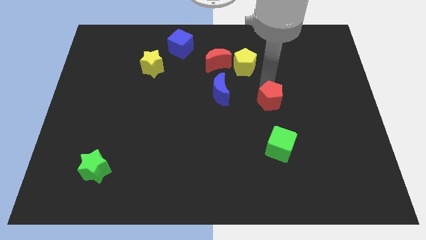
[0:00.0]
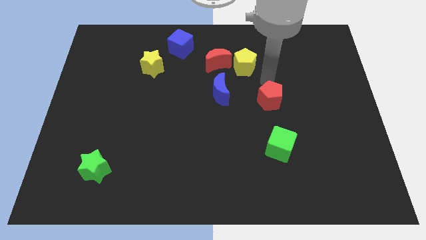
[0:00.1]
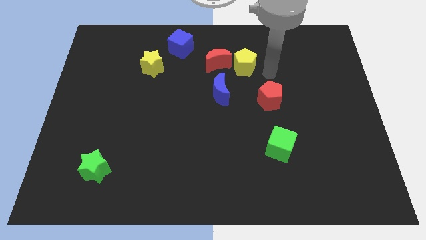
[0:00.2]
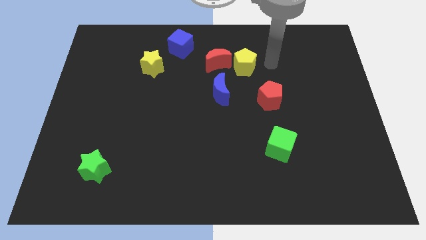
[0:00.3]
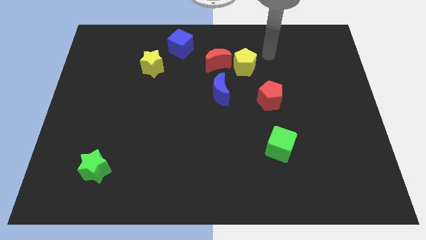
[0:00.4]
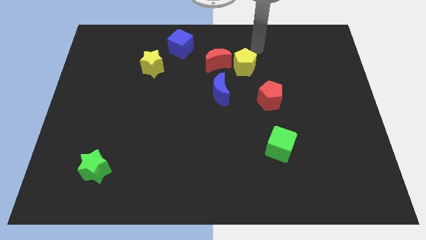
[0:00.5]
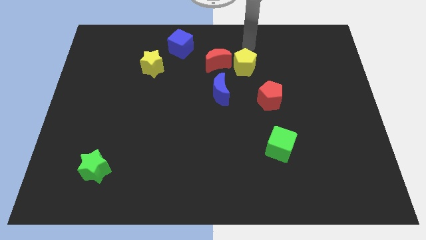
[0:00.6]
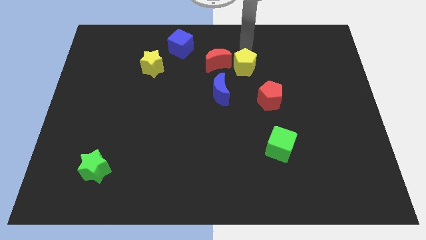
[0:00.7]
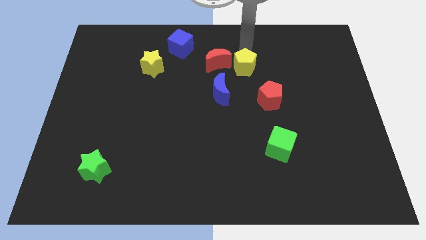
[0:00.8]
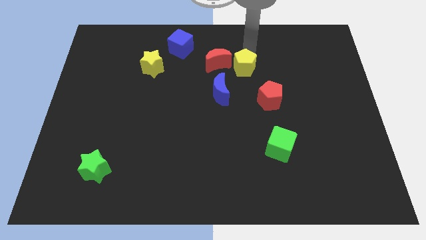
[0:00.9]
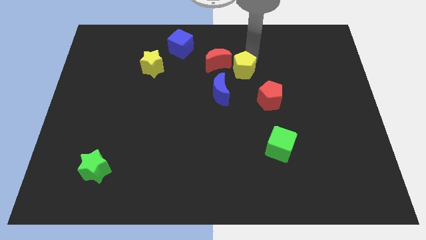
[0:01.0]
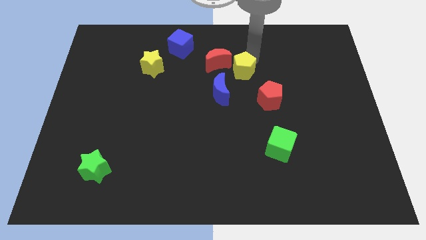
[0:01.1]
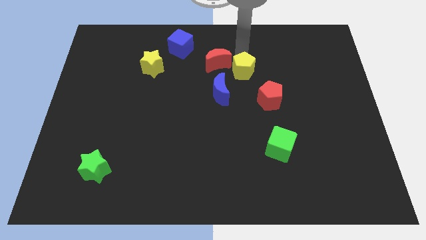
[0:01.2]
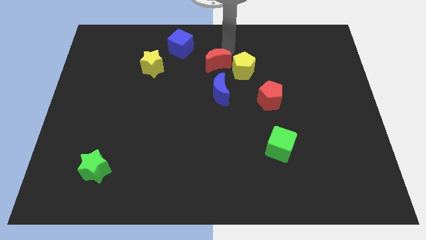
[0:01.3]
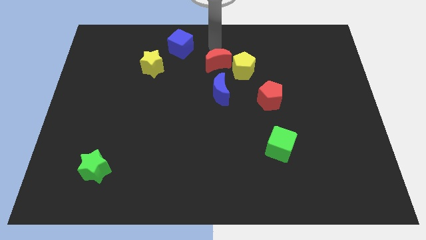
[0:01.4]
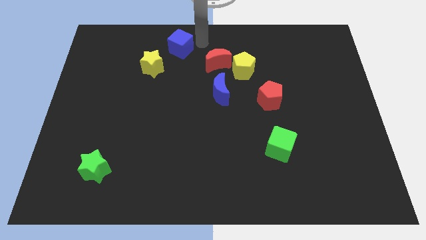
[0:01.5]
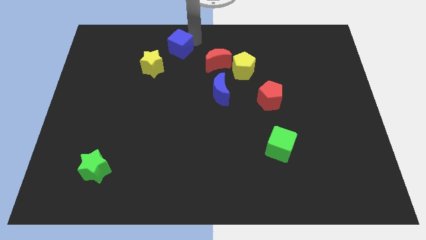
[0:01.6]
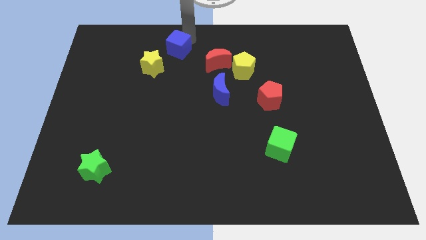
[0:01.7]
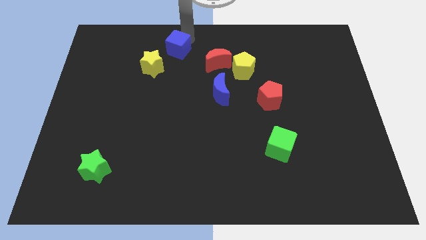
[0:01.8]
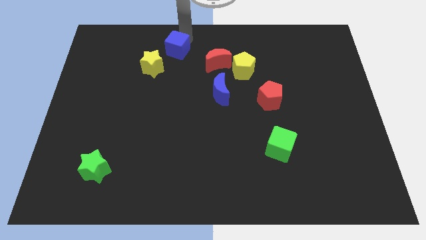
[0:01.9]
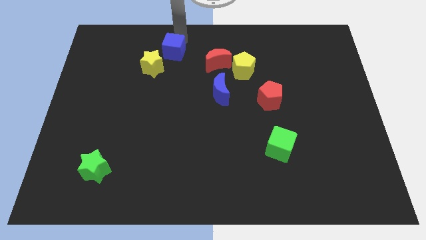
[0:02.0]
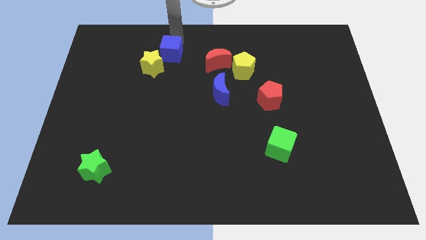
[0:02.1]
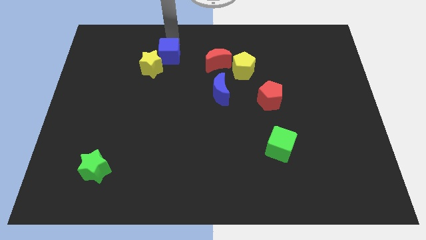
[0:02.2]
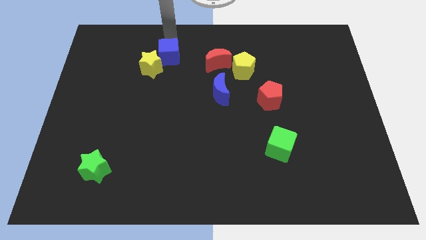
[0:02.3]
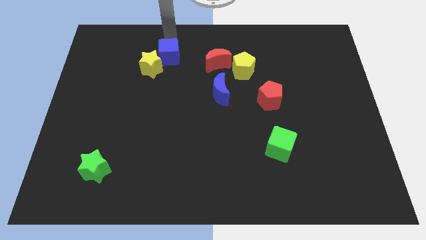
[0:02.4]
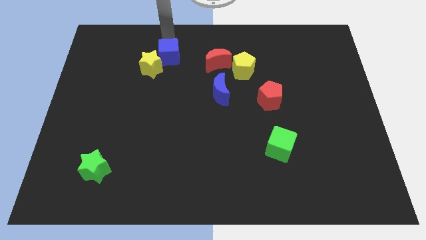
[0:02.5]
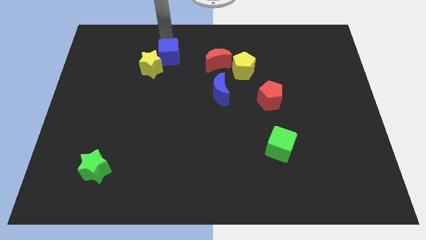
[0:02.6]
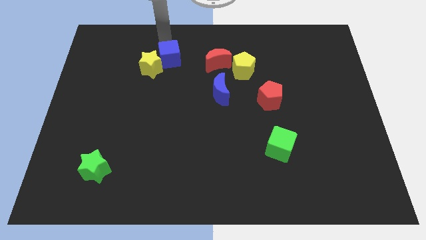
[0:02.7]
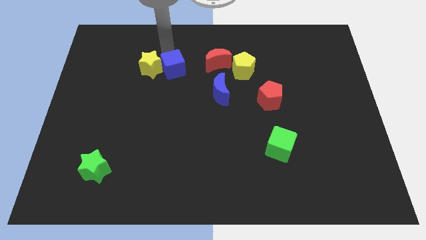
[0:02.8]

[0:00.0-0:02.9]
push the blue cube to the right side of the yellow star

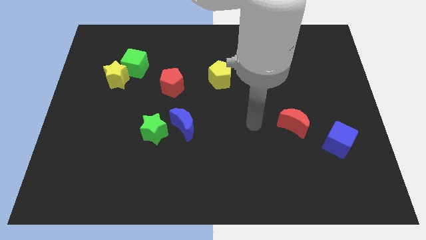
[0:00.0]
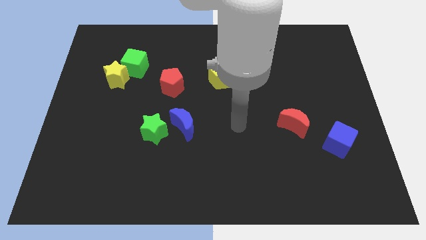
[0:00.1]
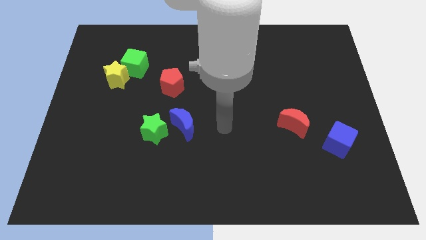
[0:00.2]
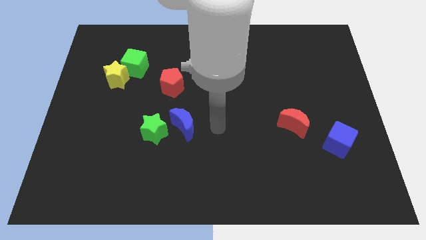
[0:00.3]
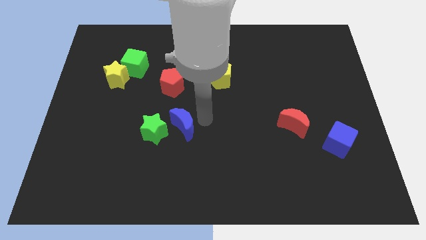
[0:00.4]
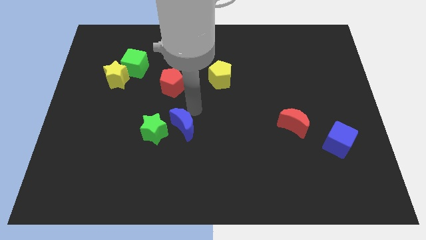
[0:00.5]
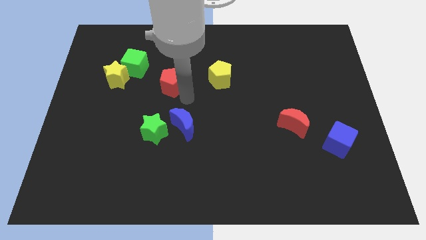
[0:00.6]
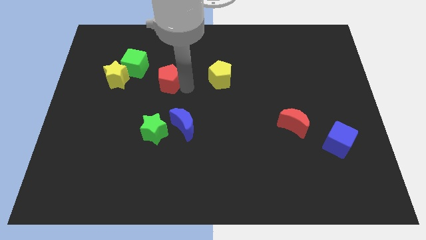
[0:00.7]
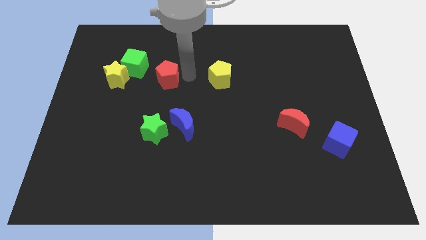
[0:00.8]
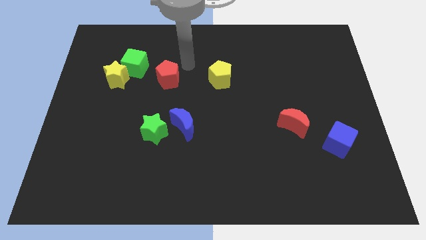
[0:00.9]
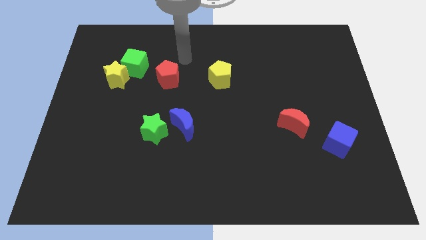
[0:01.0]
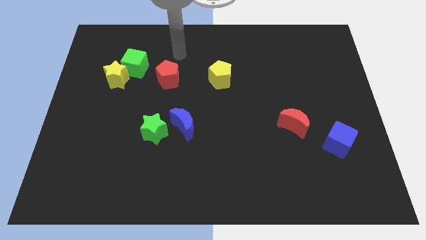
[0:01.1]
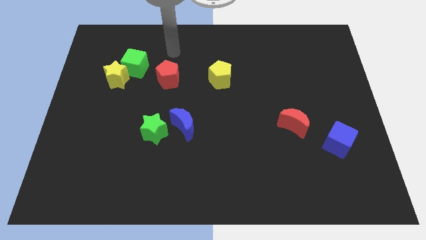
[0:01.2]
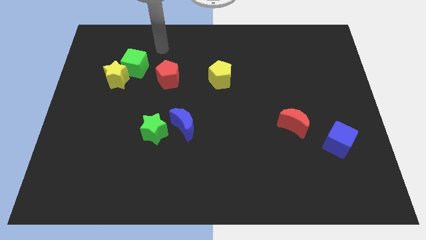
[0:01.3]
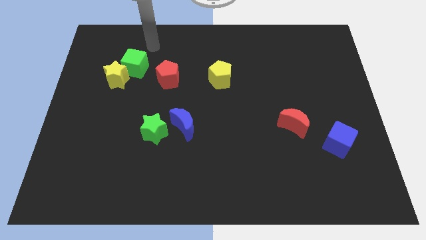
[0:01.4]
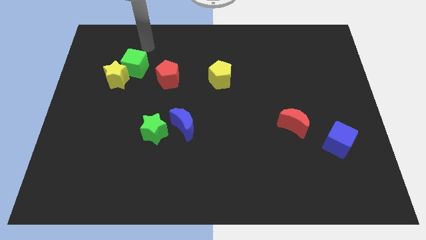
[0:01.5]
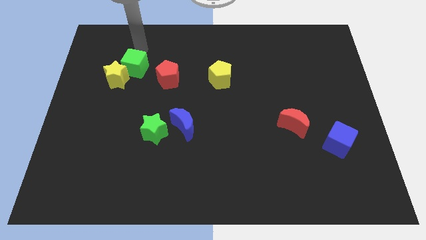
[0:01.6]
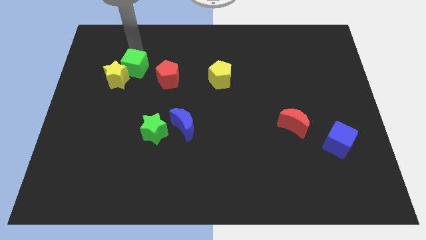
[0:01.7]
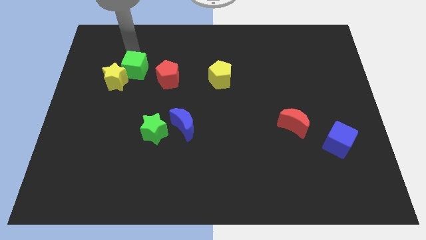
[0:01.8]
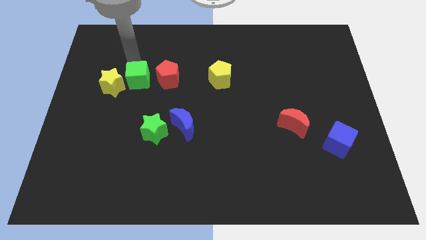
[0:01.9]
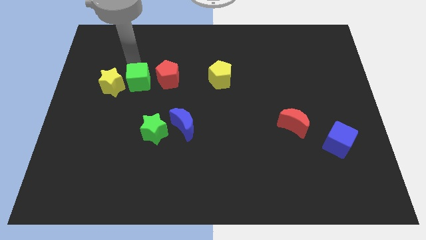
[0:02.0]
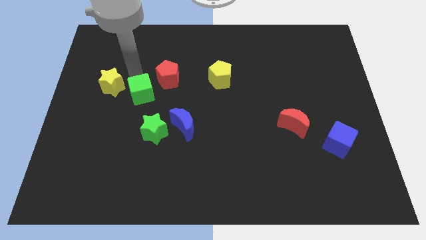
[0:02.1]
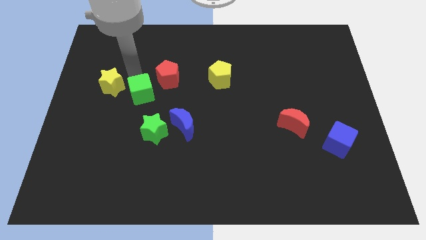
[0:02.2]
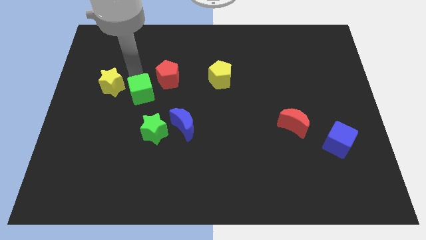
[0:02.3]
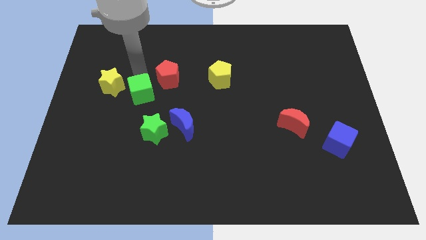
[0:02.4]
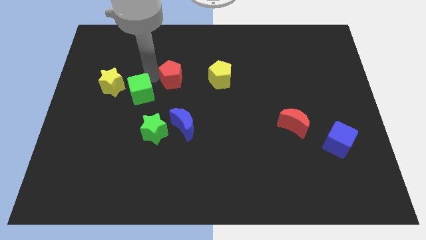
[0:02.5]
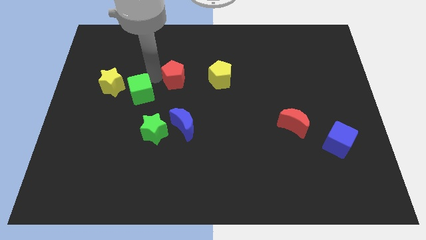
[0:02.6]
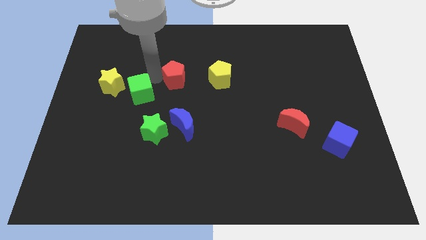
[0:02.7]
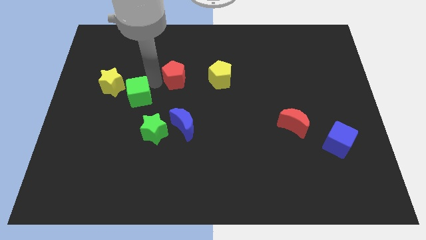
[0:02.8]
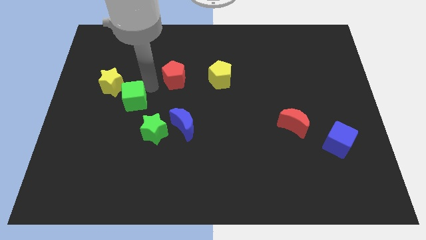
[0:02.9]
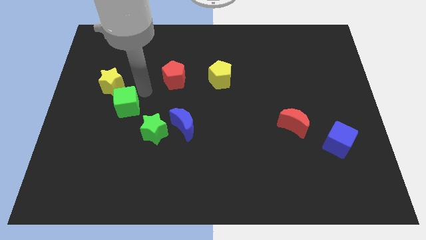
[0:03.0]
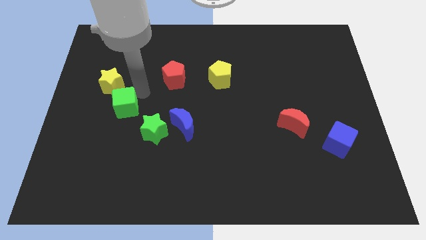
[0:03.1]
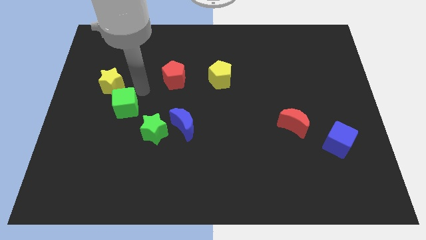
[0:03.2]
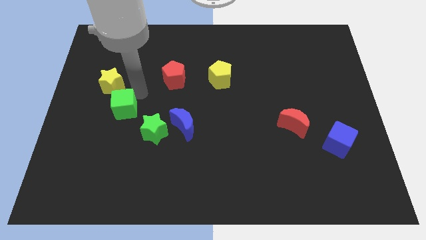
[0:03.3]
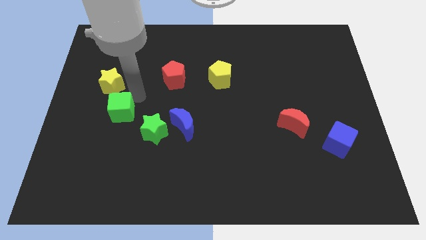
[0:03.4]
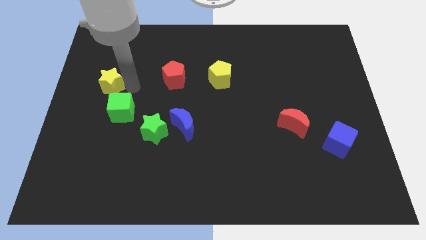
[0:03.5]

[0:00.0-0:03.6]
push the green cube towards the diagonal bottom left corner of the yellow star

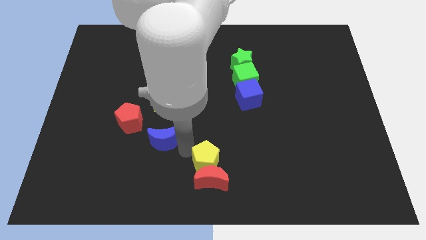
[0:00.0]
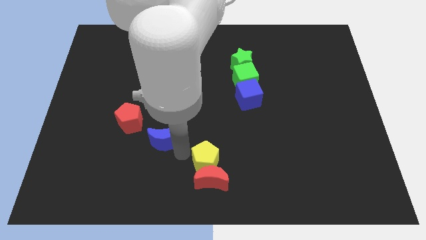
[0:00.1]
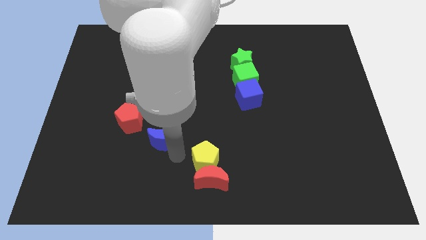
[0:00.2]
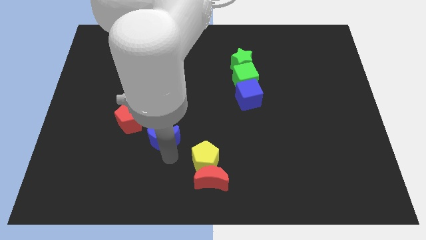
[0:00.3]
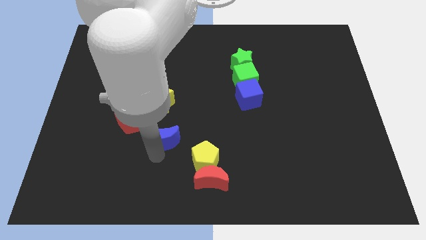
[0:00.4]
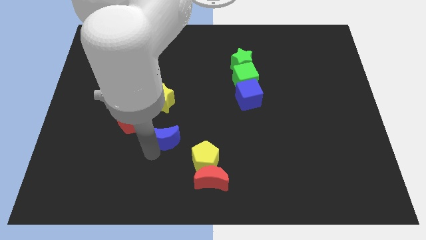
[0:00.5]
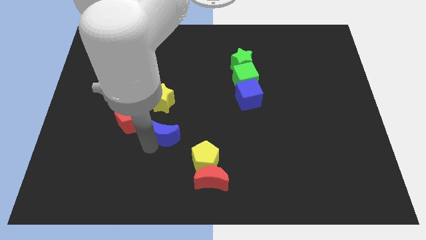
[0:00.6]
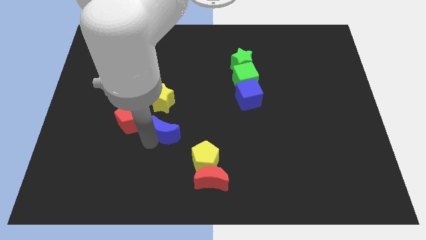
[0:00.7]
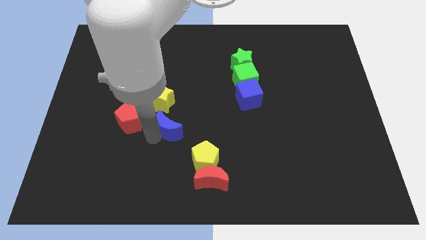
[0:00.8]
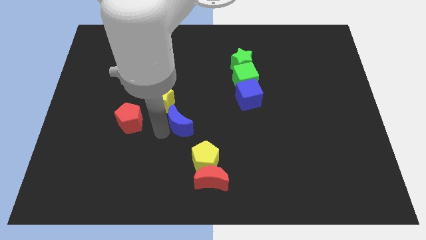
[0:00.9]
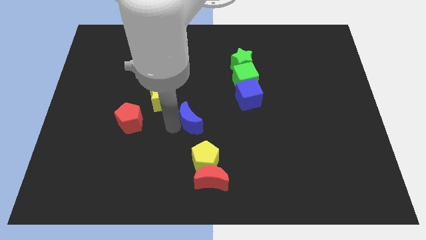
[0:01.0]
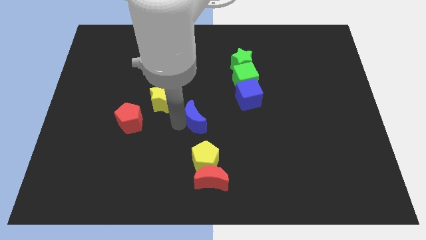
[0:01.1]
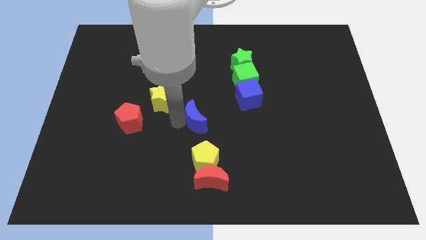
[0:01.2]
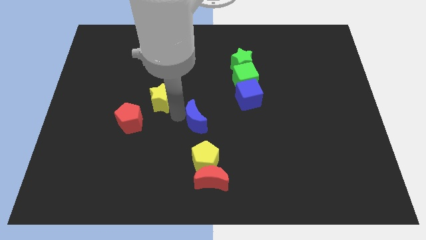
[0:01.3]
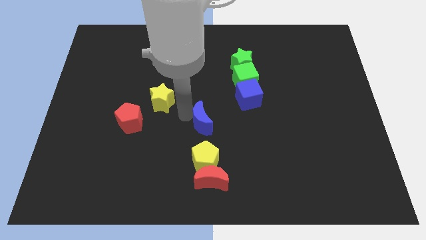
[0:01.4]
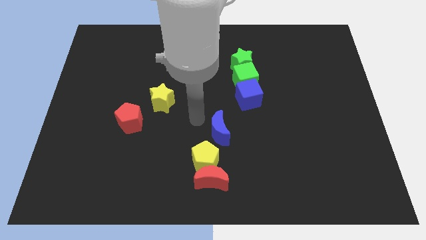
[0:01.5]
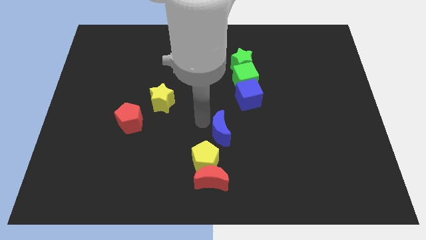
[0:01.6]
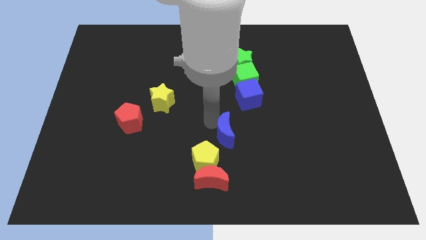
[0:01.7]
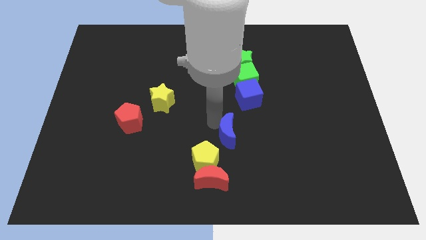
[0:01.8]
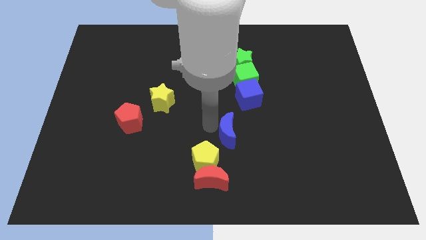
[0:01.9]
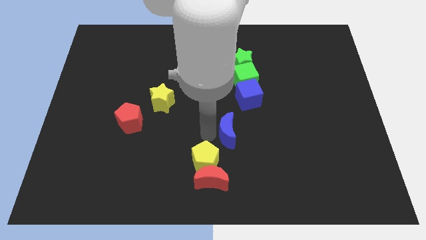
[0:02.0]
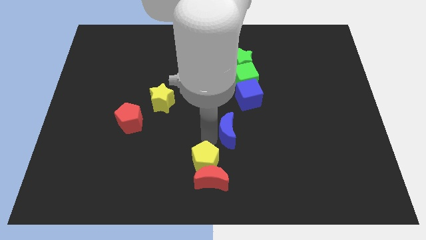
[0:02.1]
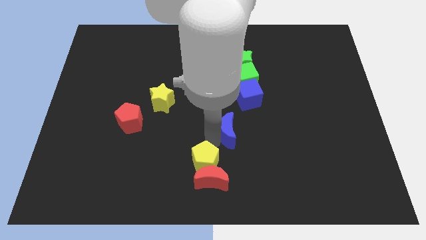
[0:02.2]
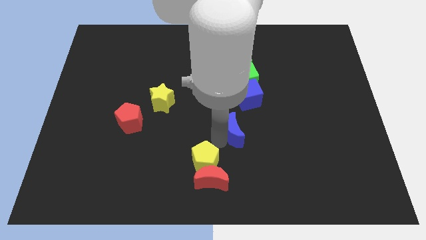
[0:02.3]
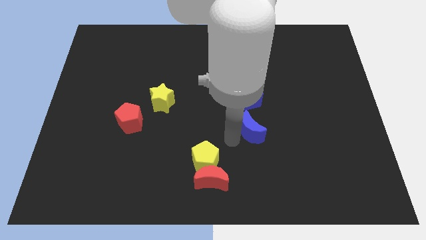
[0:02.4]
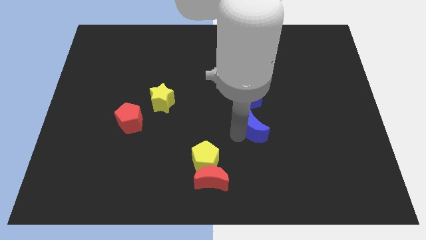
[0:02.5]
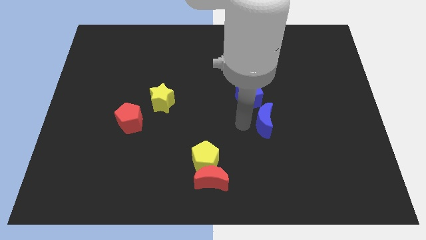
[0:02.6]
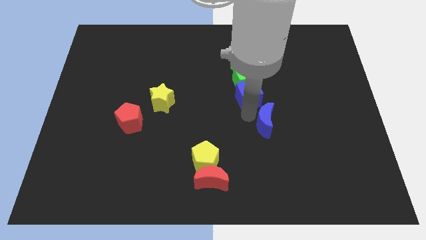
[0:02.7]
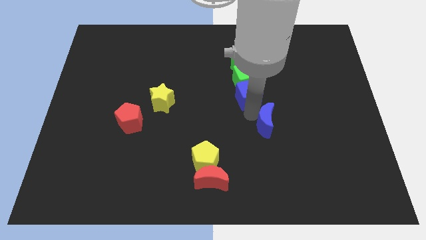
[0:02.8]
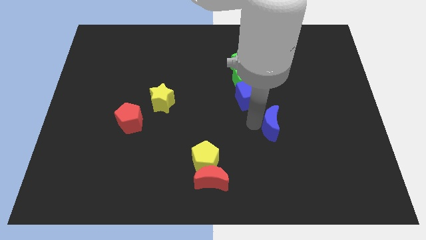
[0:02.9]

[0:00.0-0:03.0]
slide the blue moon away from the red pentagon
